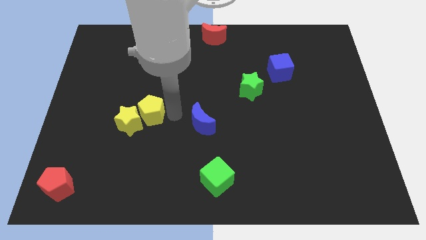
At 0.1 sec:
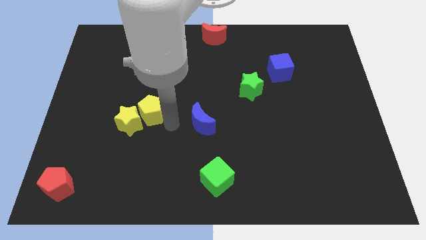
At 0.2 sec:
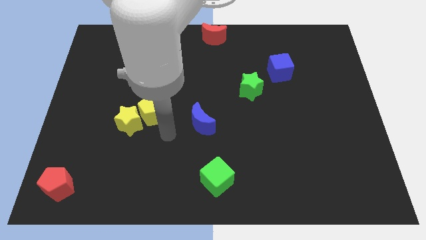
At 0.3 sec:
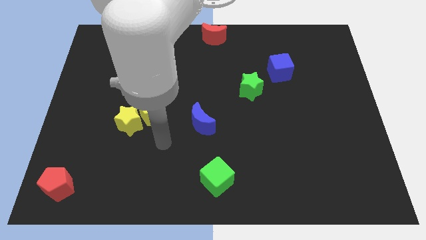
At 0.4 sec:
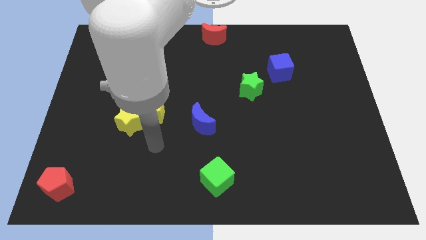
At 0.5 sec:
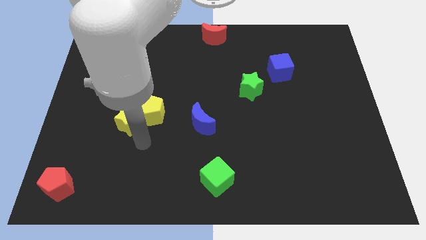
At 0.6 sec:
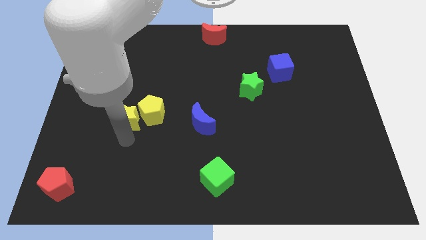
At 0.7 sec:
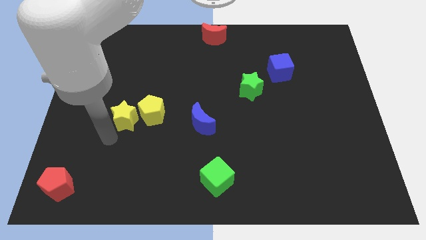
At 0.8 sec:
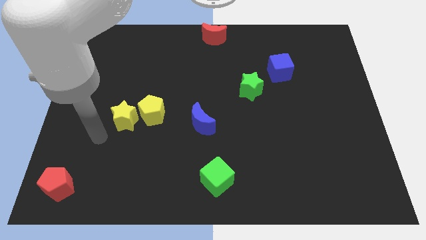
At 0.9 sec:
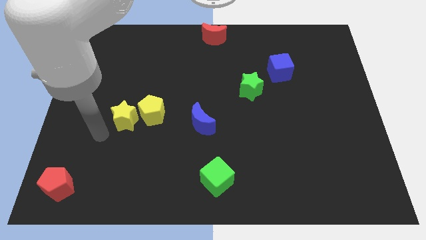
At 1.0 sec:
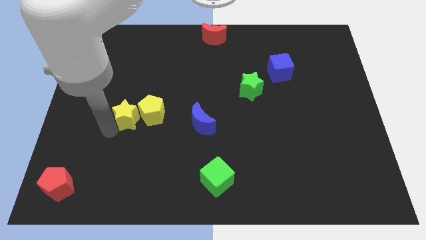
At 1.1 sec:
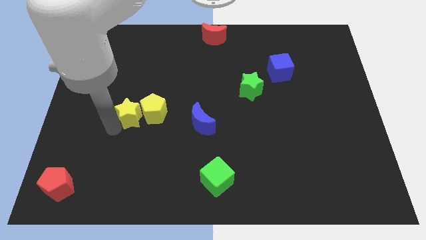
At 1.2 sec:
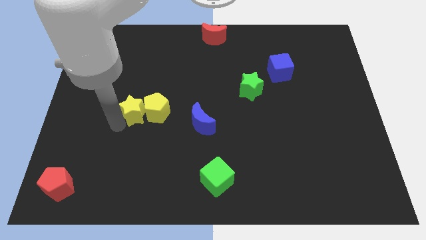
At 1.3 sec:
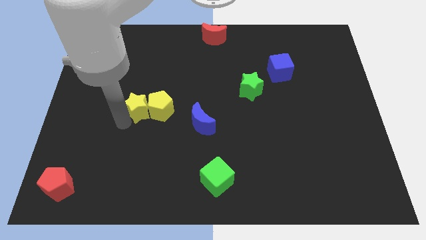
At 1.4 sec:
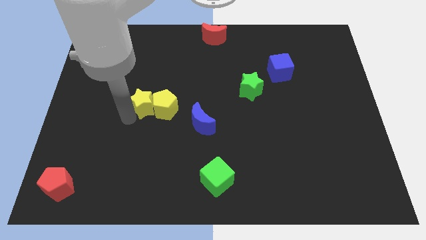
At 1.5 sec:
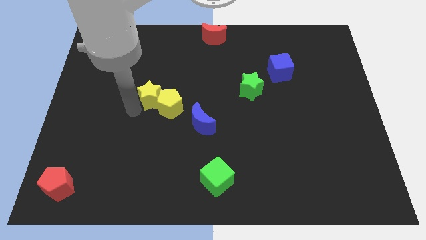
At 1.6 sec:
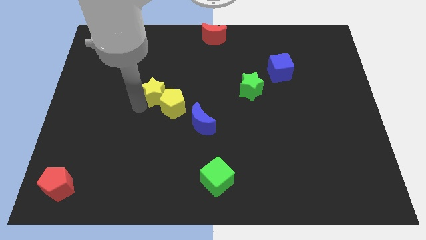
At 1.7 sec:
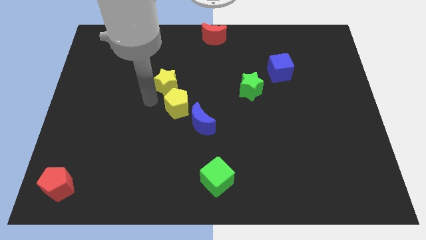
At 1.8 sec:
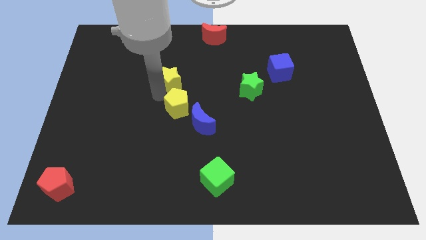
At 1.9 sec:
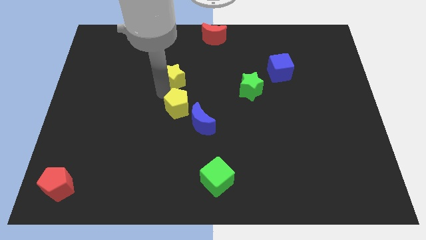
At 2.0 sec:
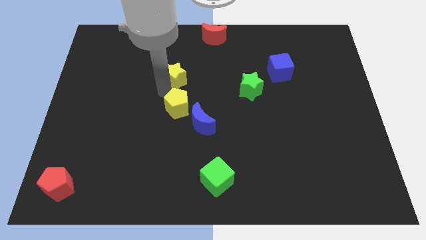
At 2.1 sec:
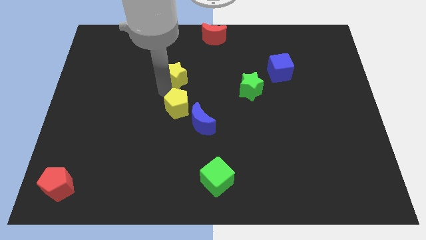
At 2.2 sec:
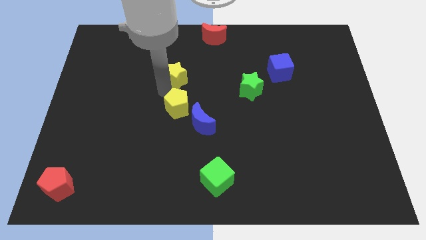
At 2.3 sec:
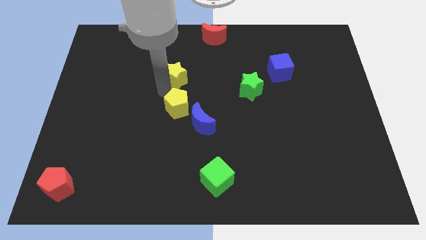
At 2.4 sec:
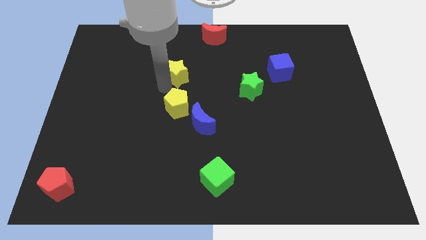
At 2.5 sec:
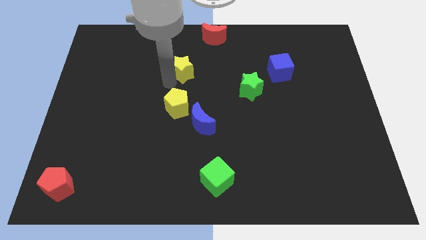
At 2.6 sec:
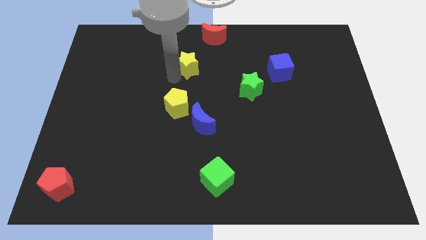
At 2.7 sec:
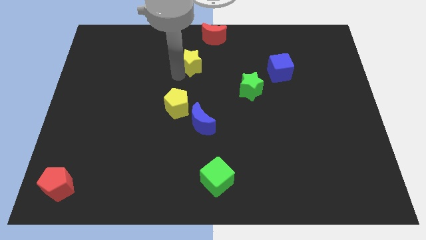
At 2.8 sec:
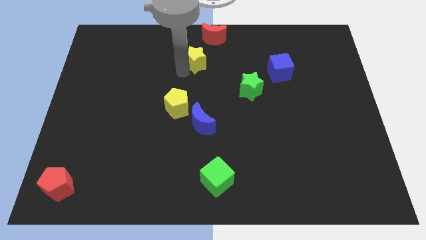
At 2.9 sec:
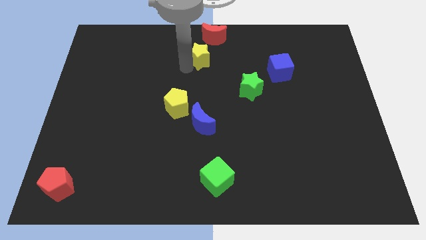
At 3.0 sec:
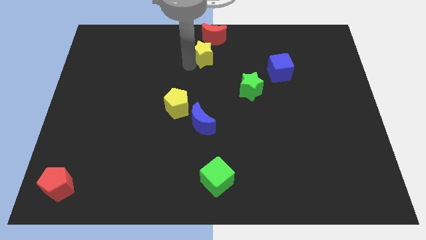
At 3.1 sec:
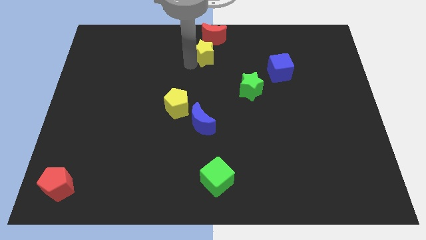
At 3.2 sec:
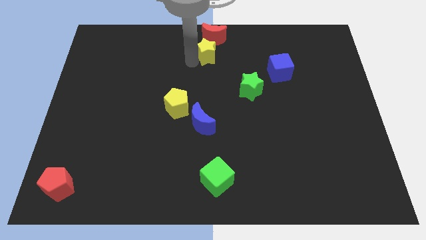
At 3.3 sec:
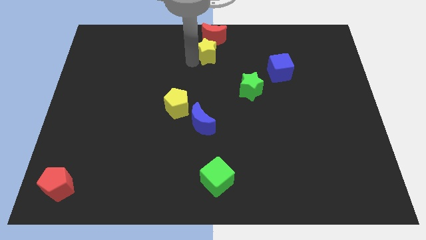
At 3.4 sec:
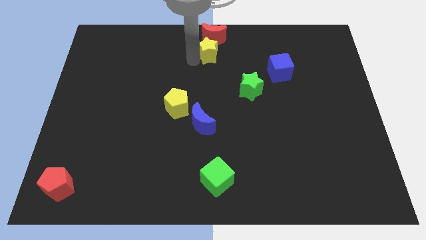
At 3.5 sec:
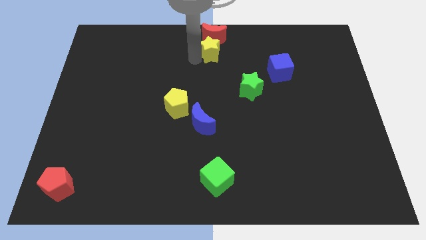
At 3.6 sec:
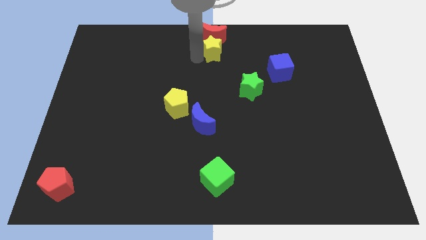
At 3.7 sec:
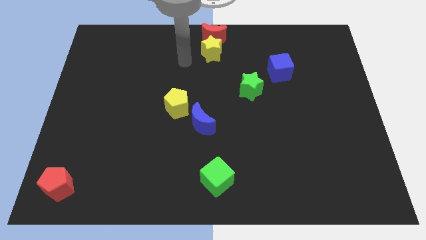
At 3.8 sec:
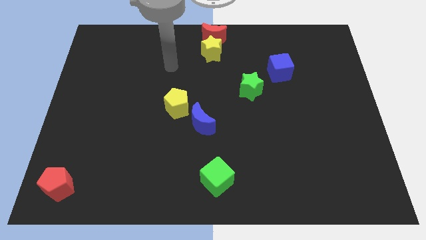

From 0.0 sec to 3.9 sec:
place the yellow star at the top center of the board

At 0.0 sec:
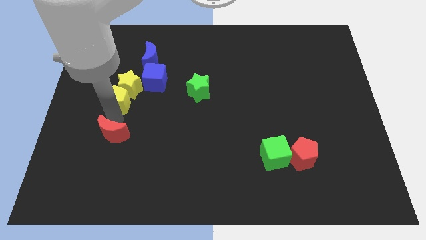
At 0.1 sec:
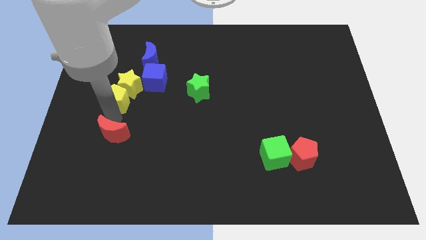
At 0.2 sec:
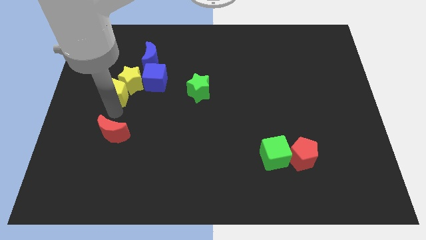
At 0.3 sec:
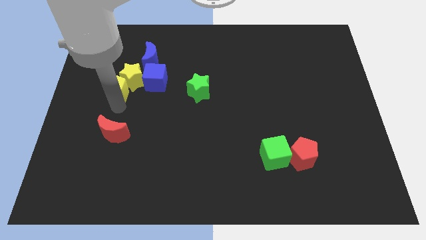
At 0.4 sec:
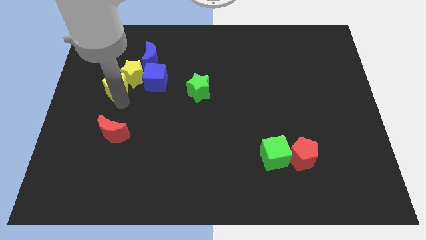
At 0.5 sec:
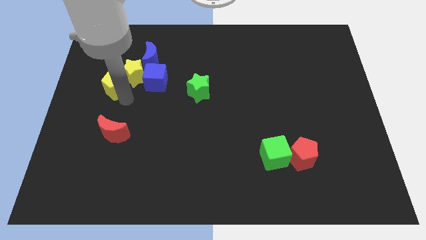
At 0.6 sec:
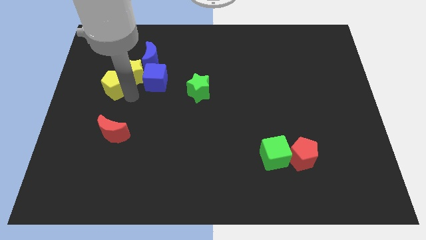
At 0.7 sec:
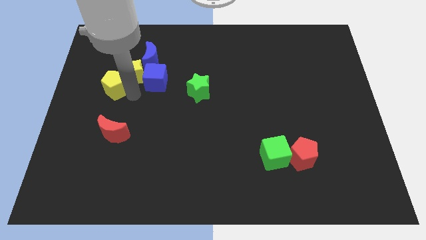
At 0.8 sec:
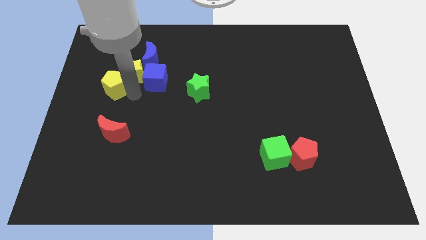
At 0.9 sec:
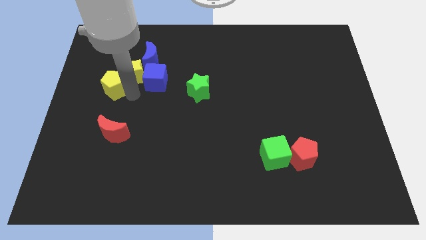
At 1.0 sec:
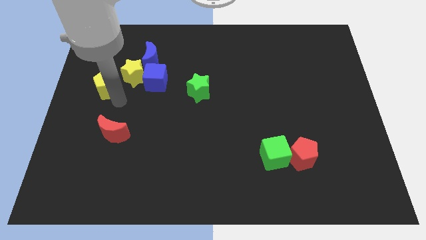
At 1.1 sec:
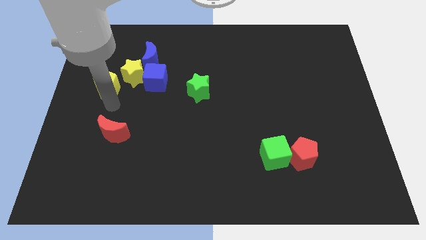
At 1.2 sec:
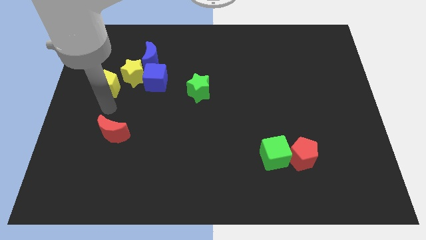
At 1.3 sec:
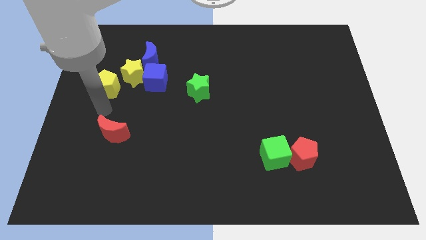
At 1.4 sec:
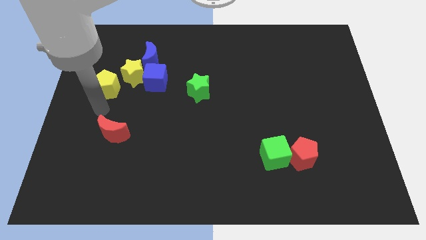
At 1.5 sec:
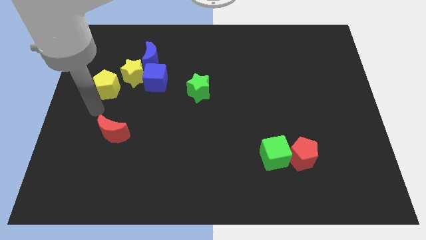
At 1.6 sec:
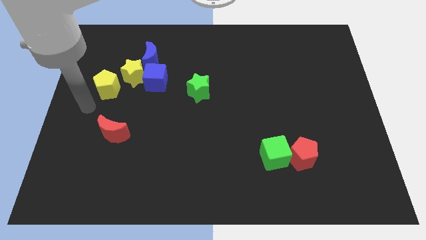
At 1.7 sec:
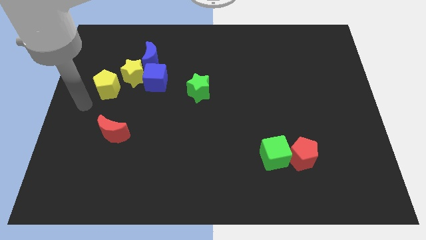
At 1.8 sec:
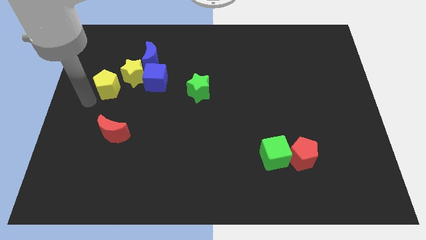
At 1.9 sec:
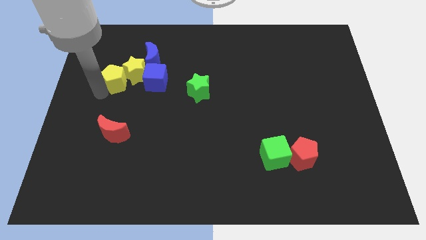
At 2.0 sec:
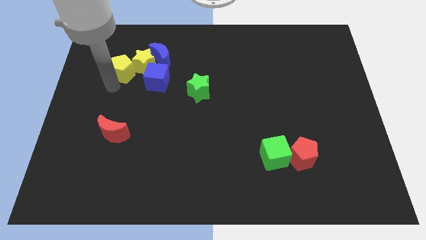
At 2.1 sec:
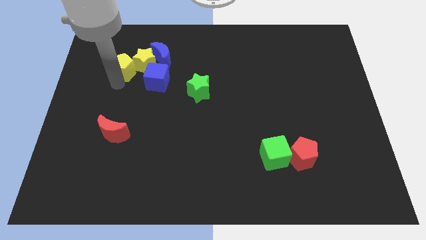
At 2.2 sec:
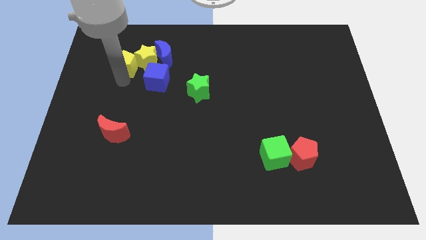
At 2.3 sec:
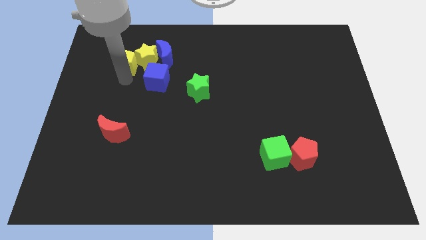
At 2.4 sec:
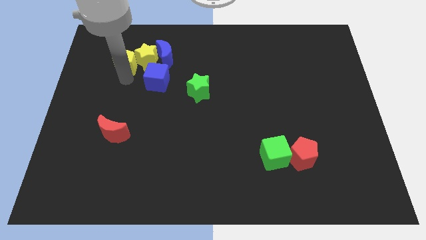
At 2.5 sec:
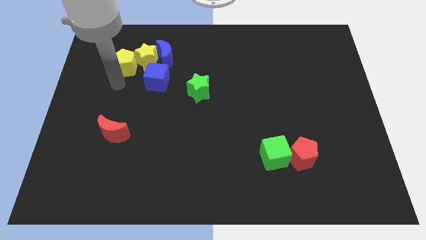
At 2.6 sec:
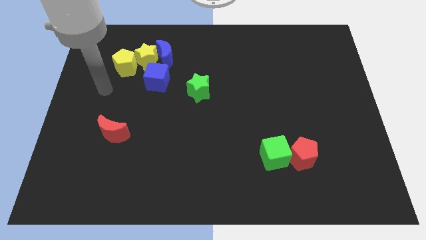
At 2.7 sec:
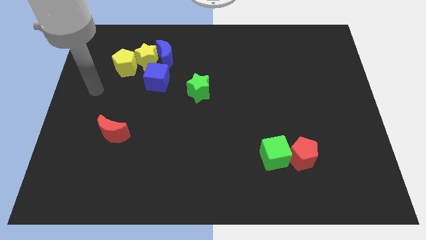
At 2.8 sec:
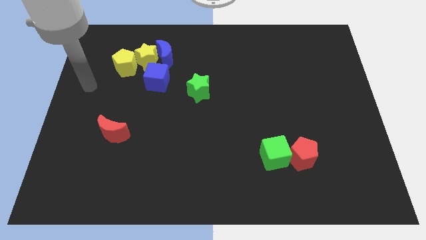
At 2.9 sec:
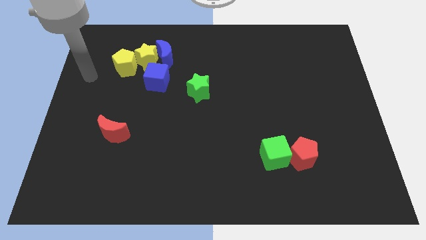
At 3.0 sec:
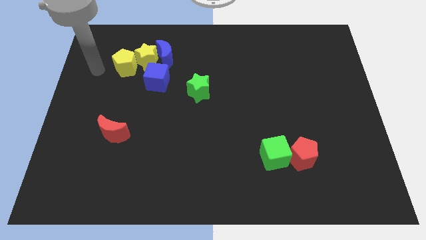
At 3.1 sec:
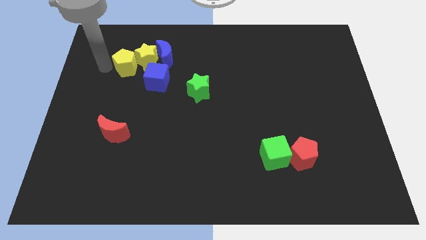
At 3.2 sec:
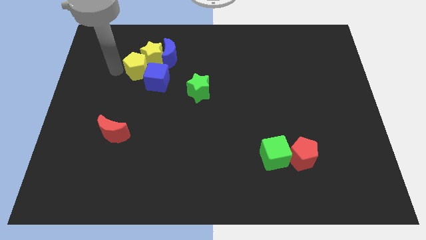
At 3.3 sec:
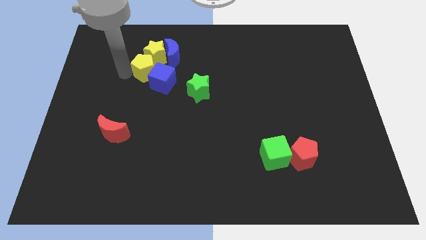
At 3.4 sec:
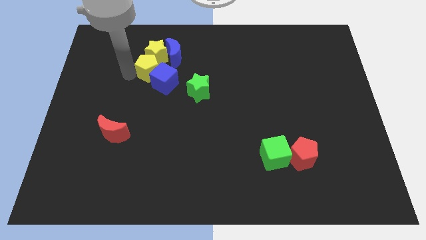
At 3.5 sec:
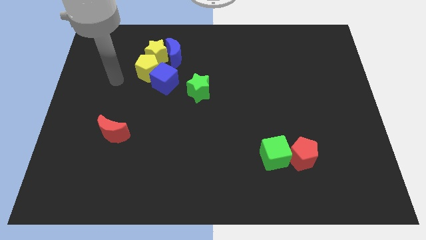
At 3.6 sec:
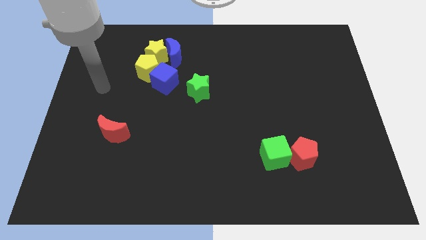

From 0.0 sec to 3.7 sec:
push the yellow blocks to the left of the blue blocks

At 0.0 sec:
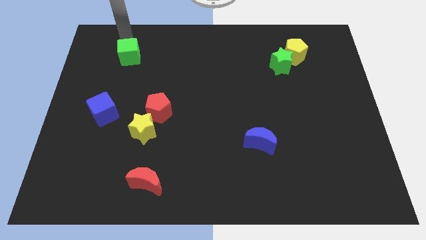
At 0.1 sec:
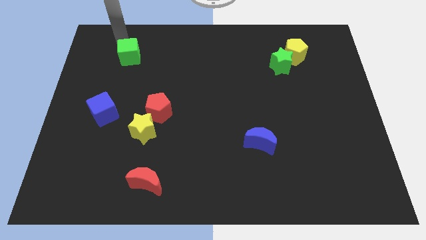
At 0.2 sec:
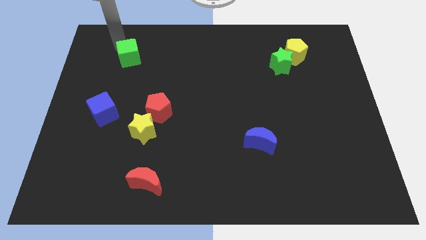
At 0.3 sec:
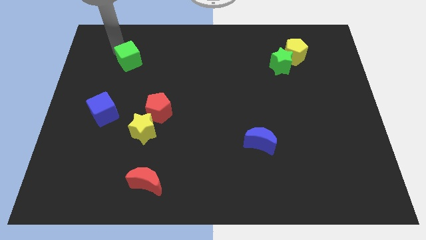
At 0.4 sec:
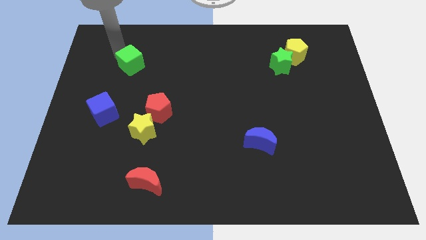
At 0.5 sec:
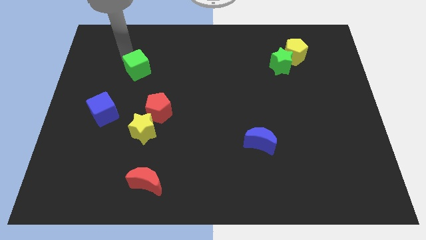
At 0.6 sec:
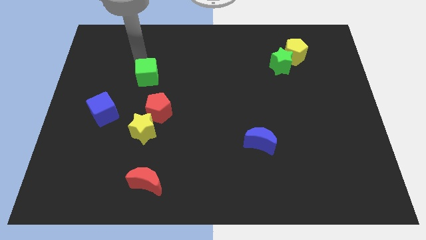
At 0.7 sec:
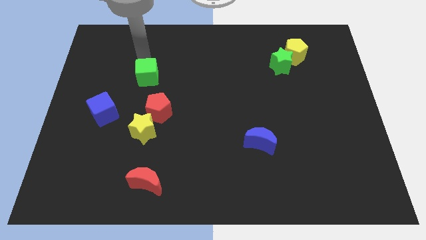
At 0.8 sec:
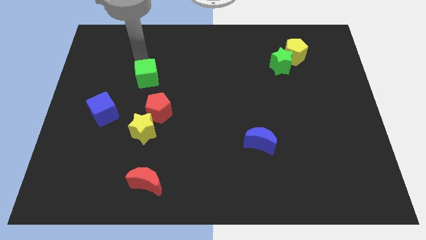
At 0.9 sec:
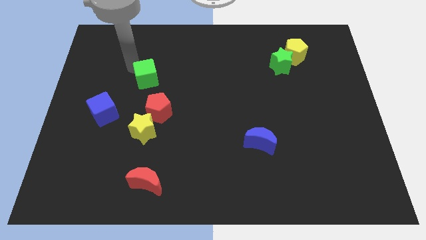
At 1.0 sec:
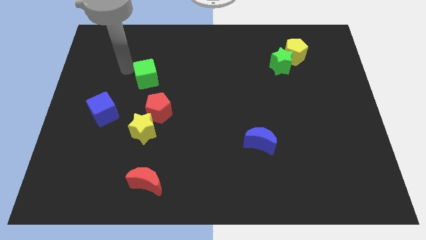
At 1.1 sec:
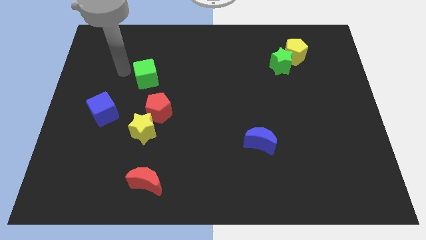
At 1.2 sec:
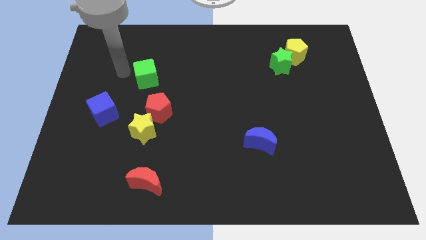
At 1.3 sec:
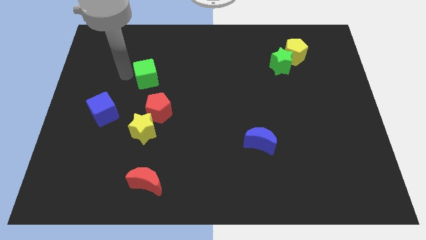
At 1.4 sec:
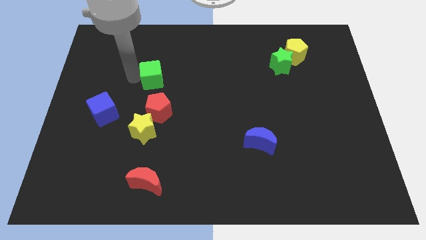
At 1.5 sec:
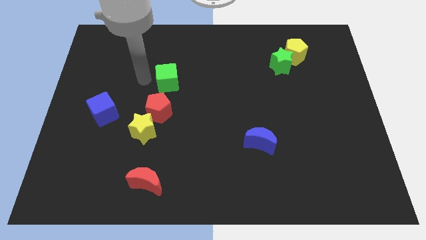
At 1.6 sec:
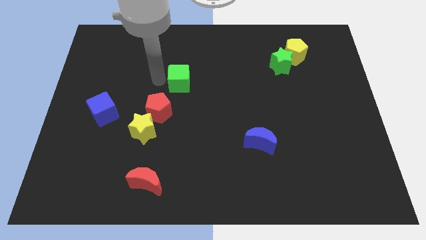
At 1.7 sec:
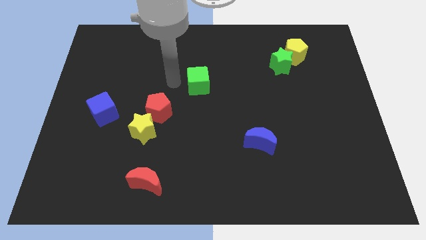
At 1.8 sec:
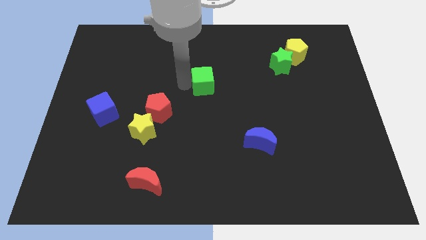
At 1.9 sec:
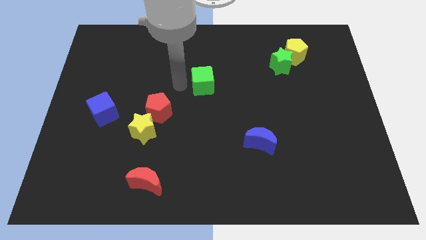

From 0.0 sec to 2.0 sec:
move the green cube to the center of the board
